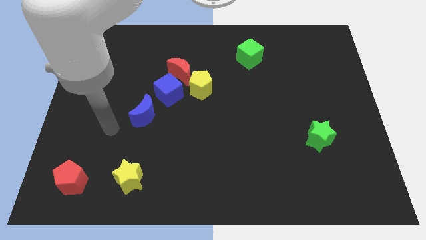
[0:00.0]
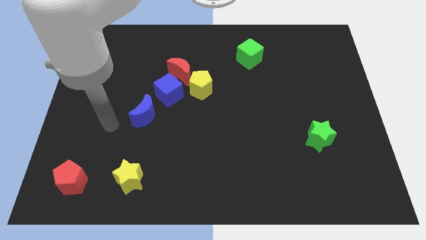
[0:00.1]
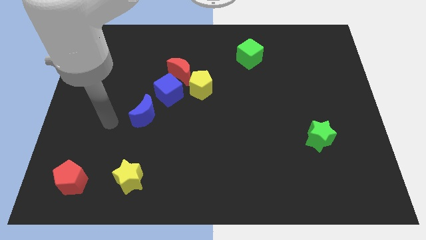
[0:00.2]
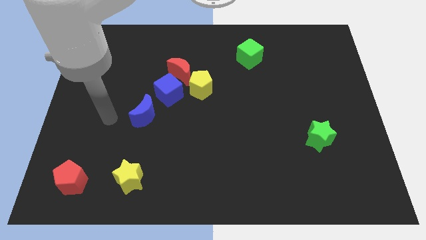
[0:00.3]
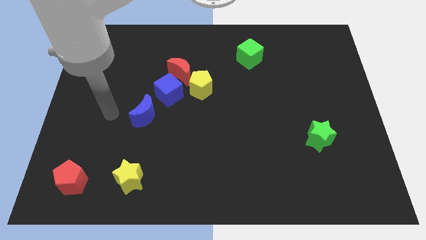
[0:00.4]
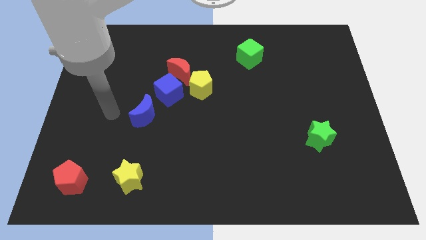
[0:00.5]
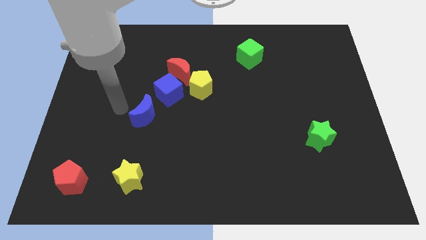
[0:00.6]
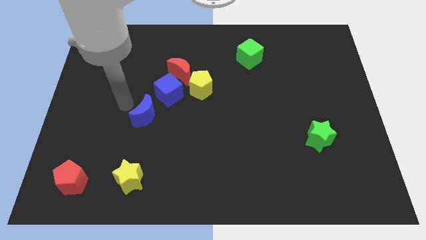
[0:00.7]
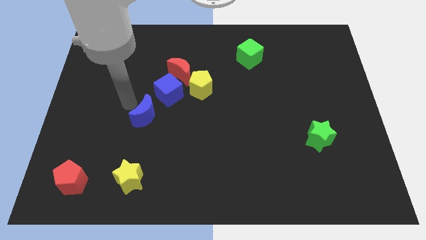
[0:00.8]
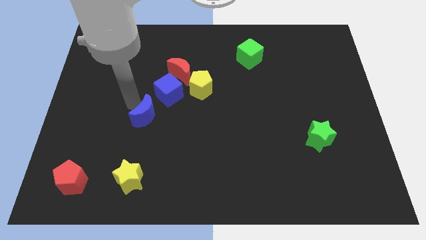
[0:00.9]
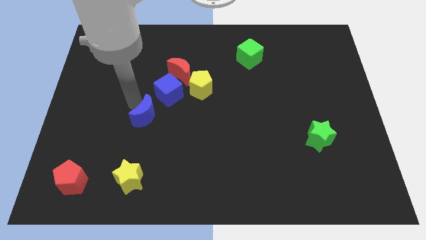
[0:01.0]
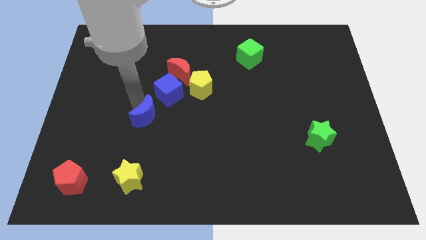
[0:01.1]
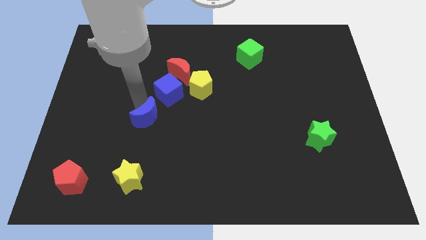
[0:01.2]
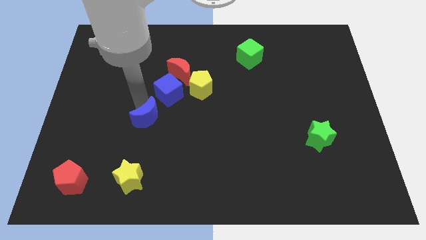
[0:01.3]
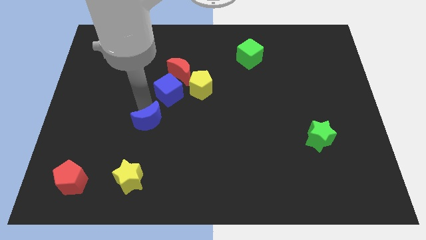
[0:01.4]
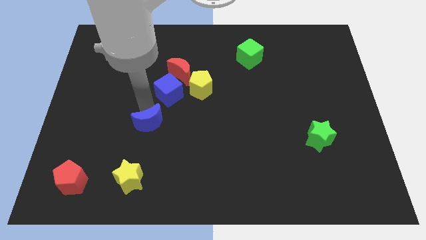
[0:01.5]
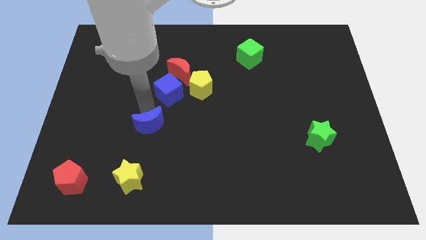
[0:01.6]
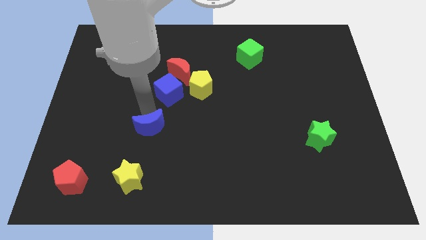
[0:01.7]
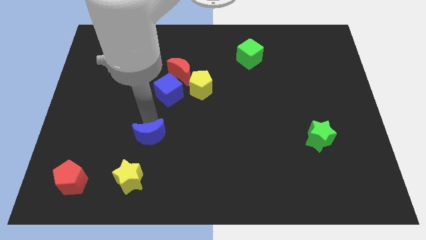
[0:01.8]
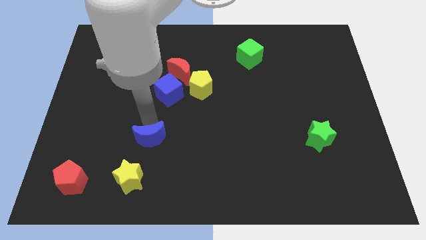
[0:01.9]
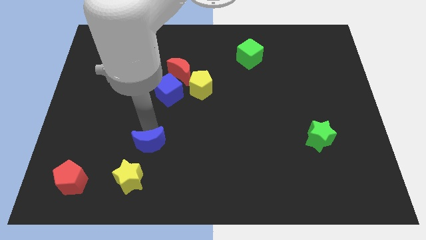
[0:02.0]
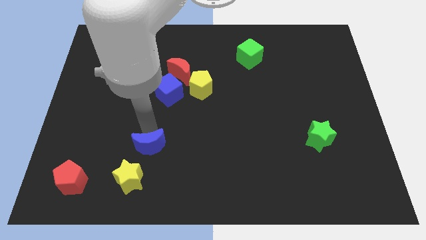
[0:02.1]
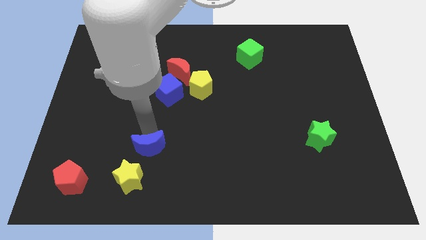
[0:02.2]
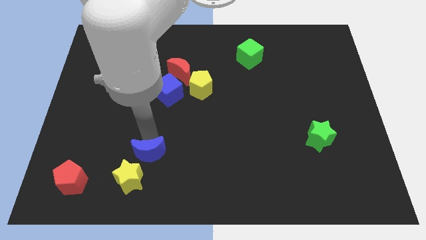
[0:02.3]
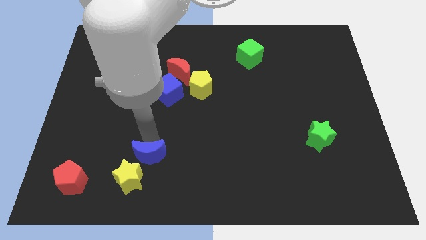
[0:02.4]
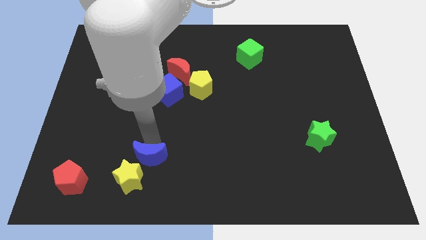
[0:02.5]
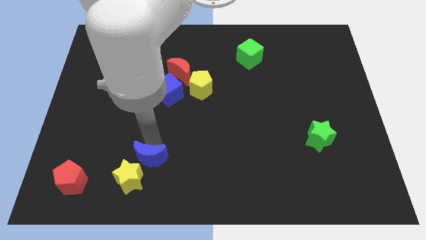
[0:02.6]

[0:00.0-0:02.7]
push the blue moon to the yellow star

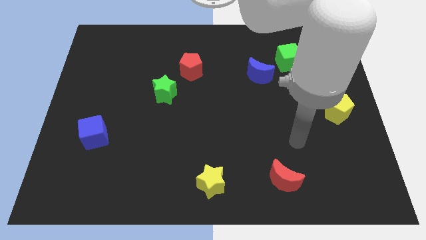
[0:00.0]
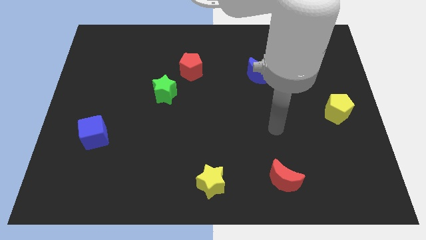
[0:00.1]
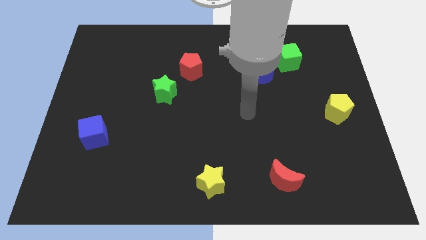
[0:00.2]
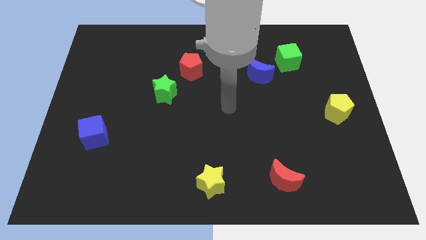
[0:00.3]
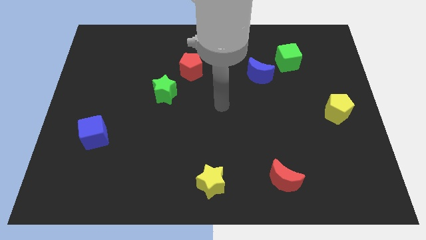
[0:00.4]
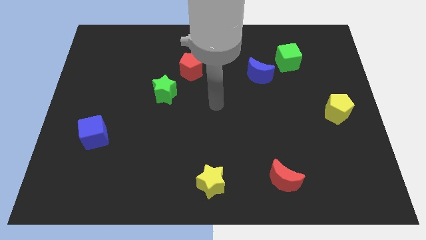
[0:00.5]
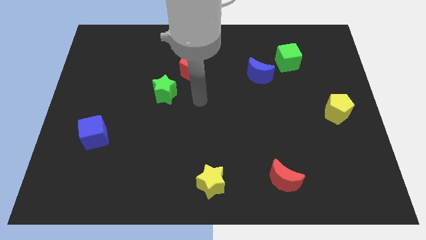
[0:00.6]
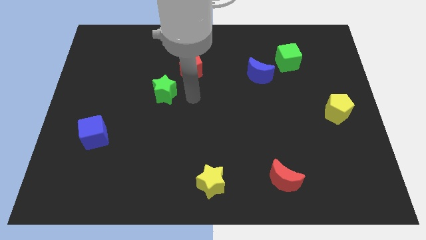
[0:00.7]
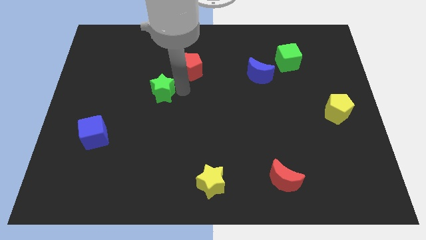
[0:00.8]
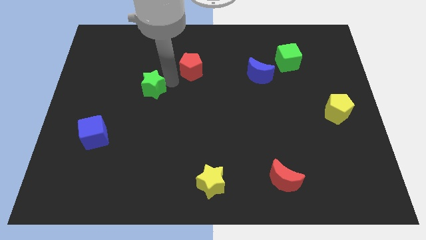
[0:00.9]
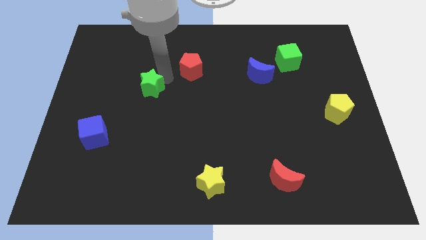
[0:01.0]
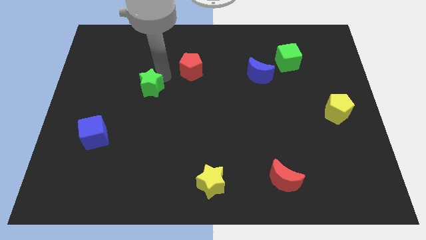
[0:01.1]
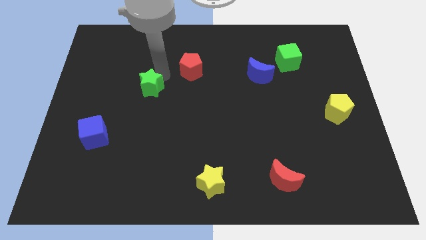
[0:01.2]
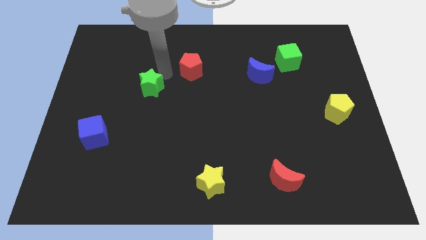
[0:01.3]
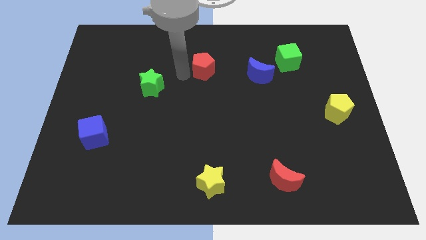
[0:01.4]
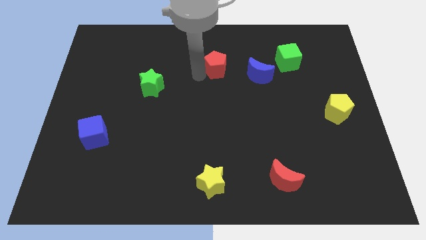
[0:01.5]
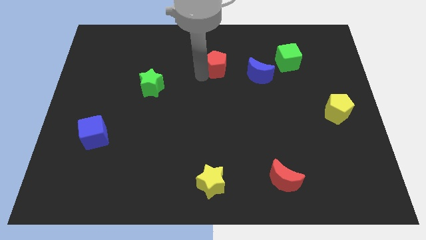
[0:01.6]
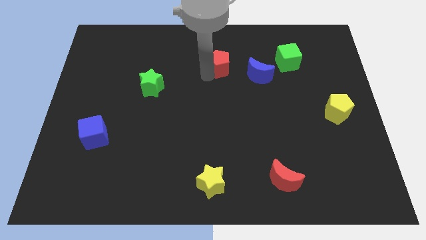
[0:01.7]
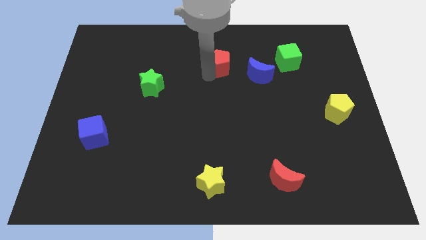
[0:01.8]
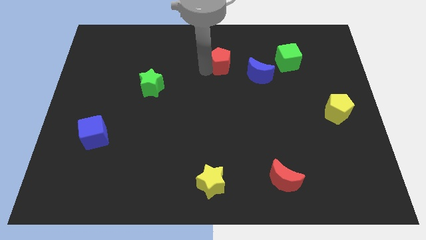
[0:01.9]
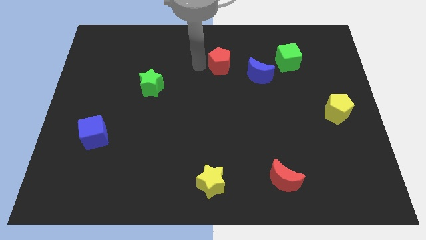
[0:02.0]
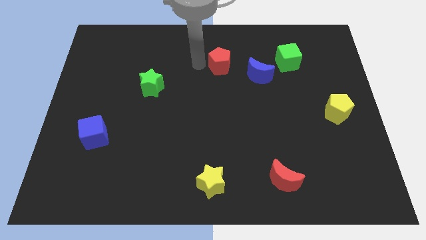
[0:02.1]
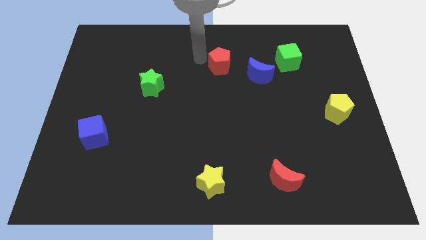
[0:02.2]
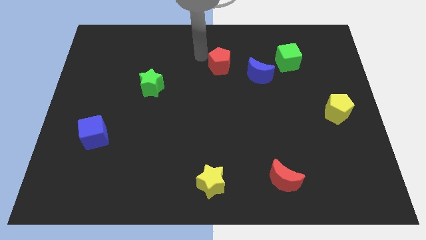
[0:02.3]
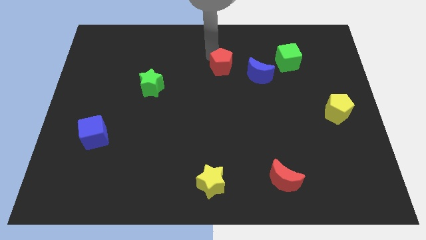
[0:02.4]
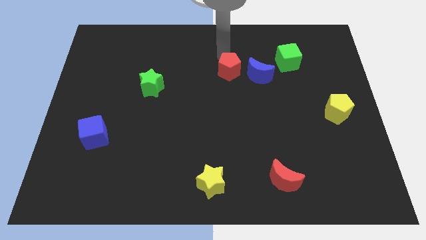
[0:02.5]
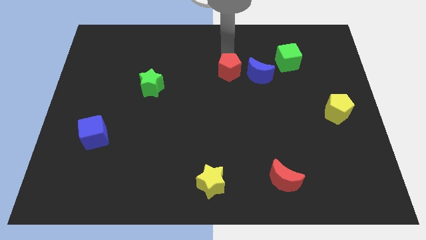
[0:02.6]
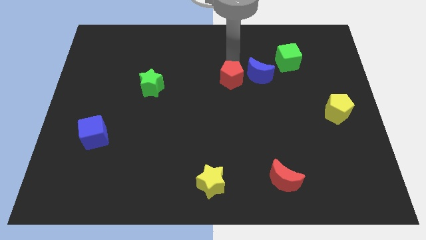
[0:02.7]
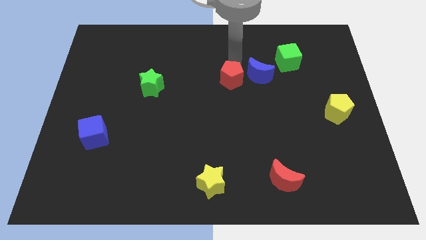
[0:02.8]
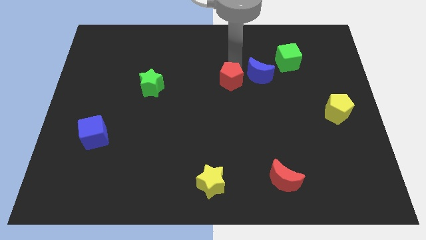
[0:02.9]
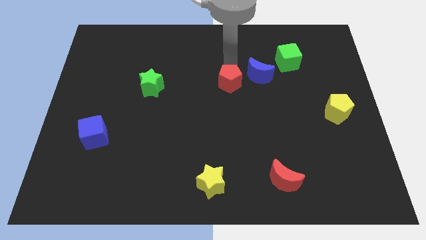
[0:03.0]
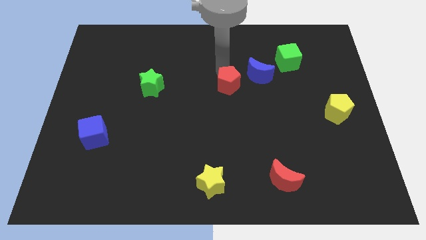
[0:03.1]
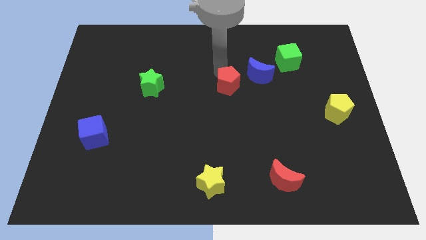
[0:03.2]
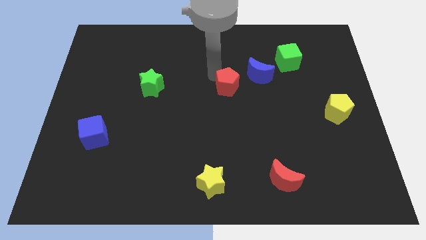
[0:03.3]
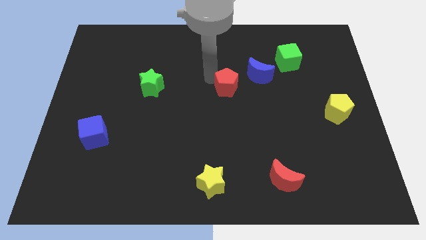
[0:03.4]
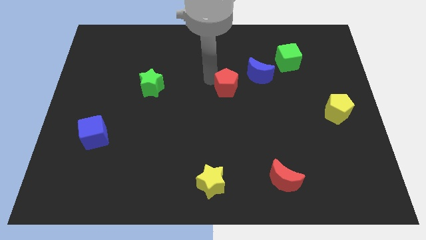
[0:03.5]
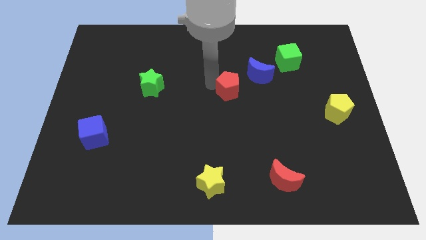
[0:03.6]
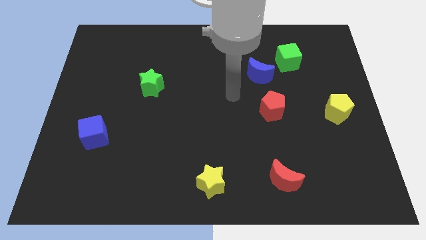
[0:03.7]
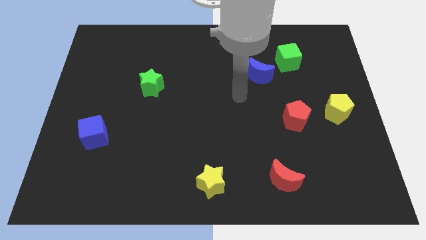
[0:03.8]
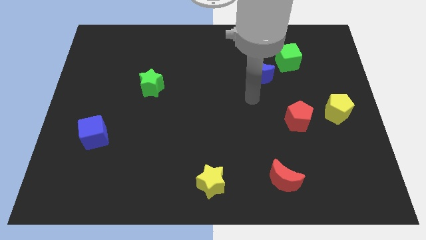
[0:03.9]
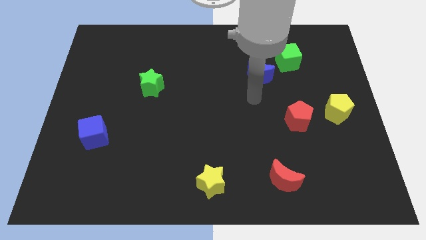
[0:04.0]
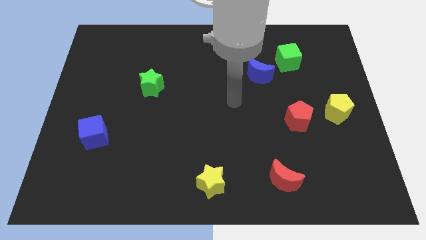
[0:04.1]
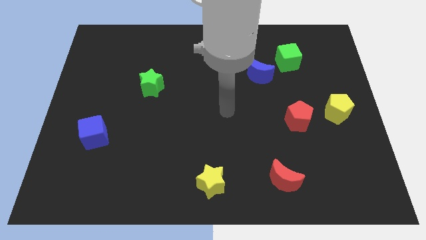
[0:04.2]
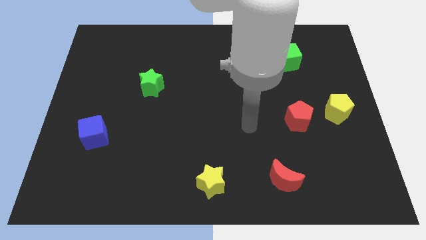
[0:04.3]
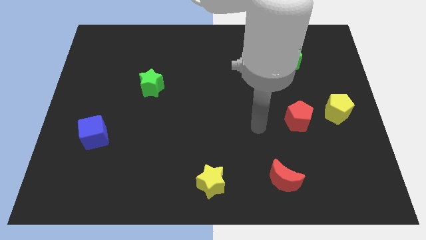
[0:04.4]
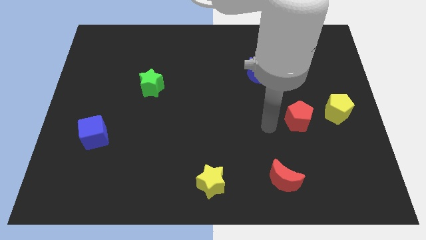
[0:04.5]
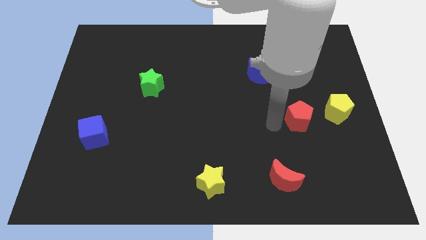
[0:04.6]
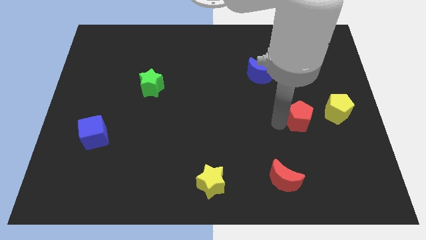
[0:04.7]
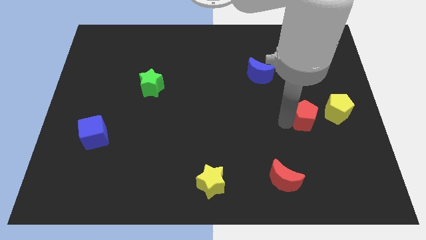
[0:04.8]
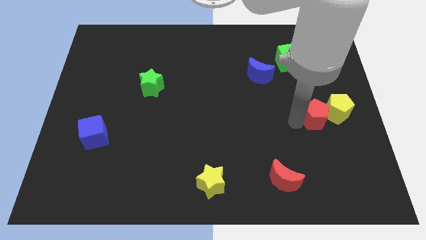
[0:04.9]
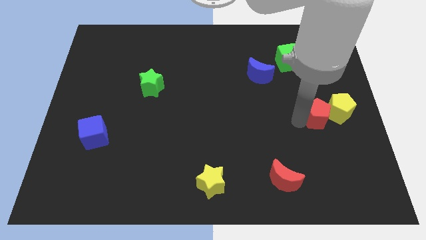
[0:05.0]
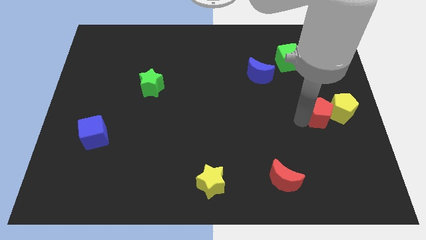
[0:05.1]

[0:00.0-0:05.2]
put the red pentagon close to the yellow pentagon
